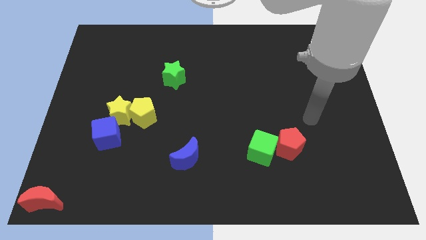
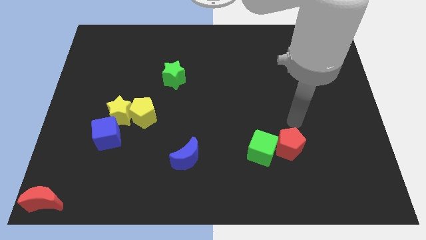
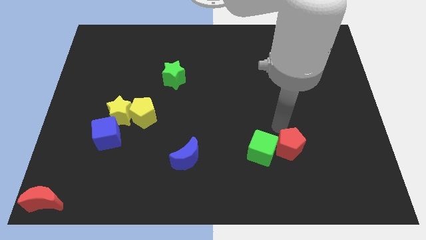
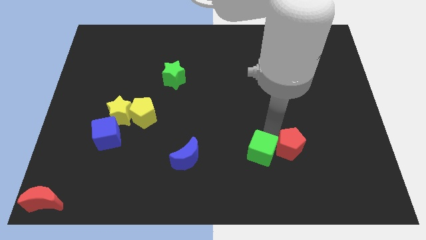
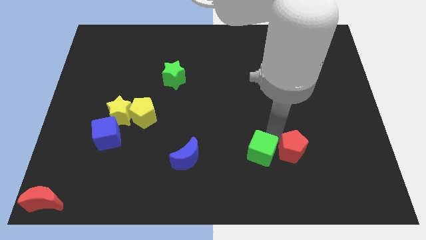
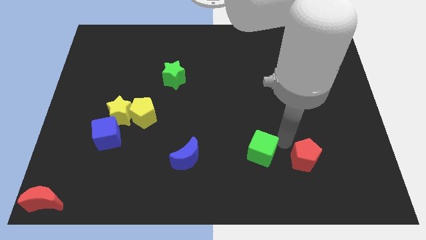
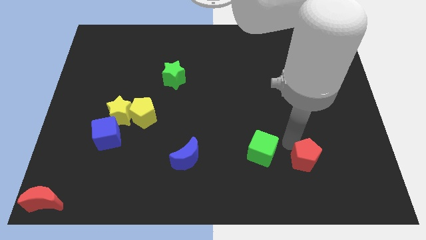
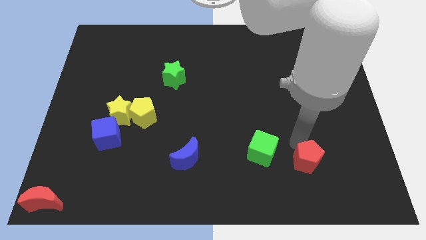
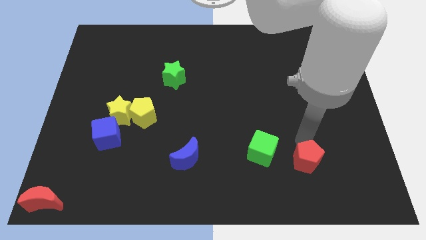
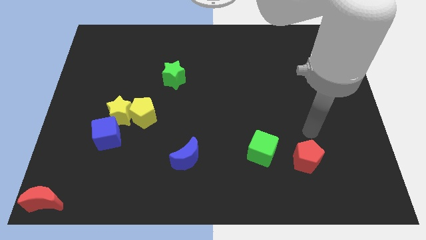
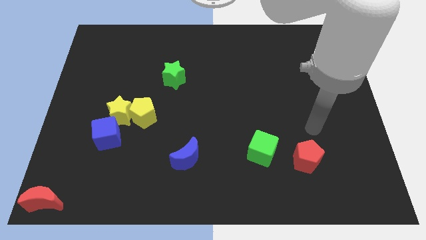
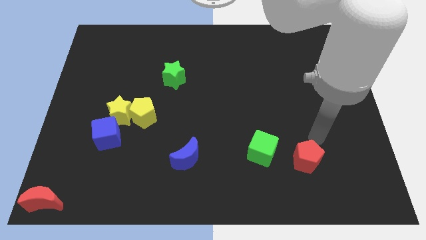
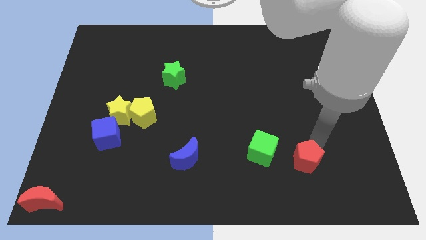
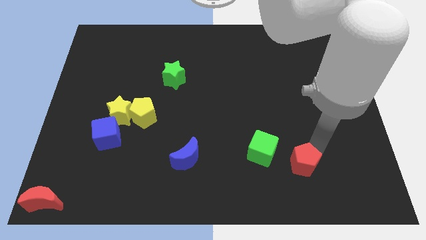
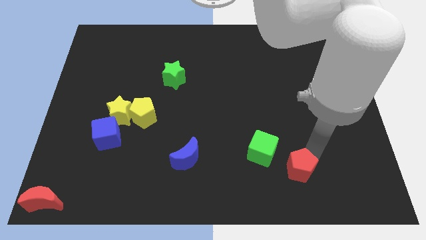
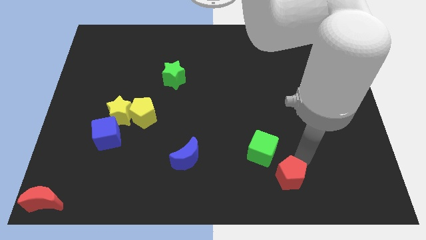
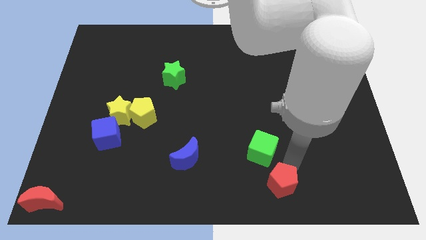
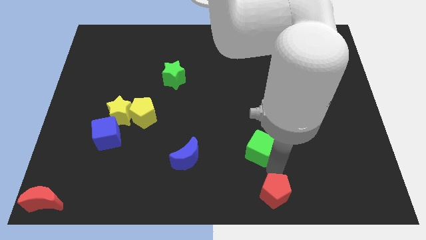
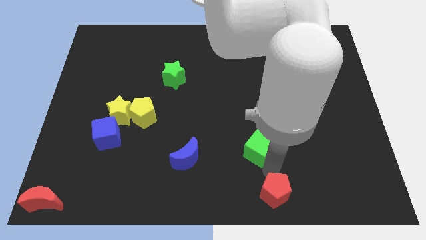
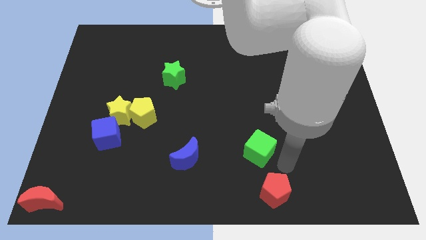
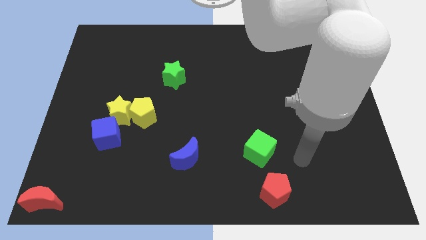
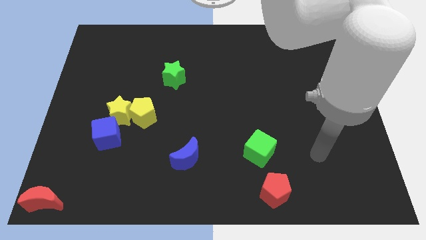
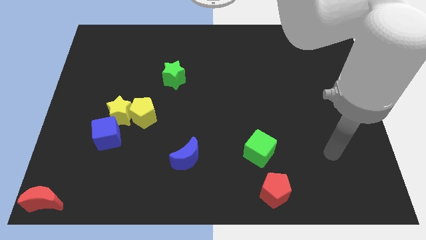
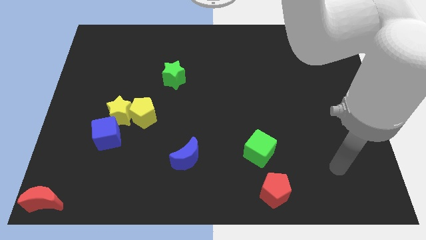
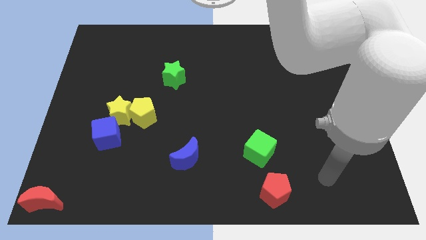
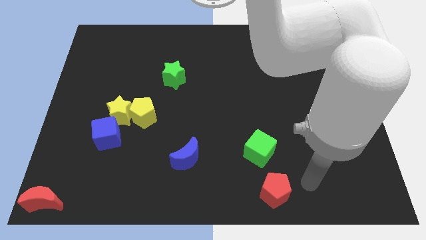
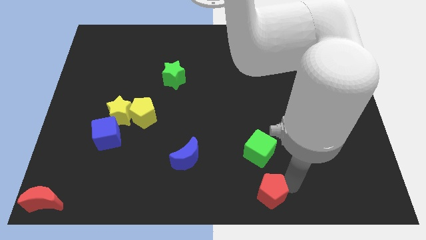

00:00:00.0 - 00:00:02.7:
place the red pentagon below the green cube

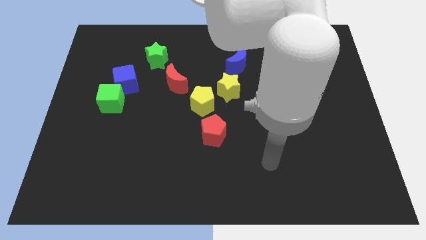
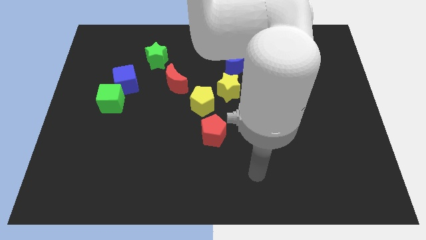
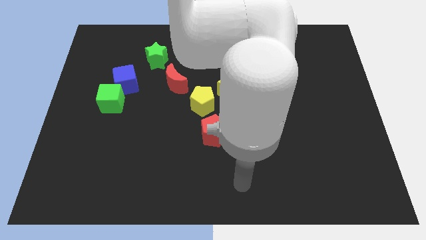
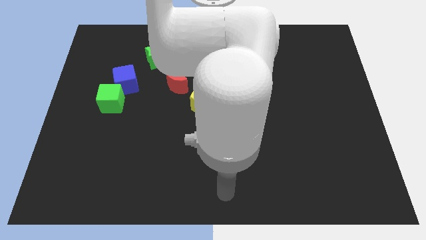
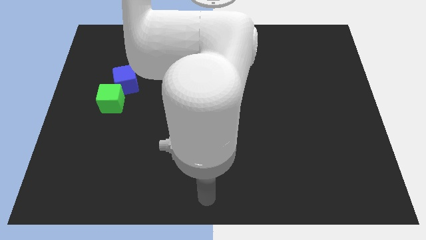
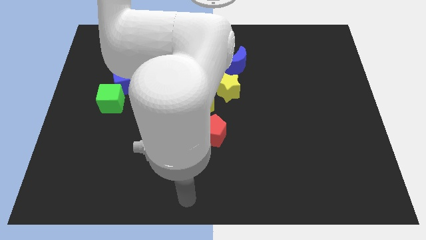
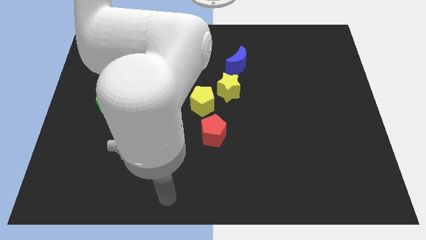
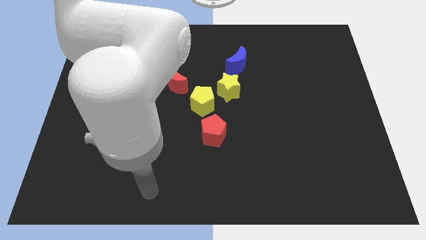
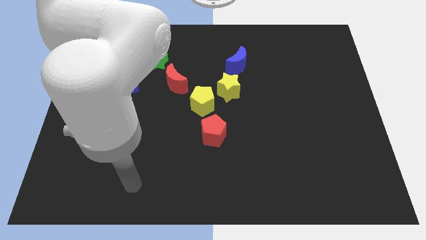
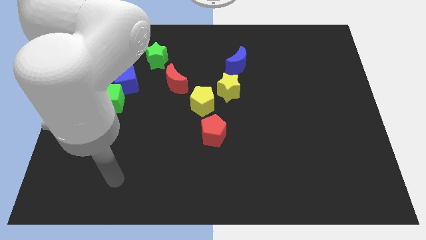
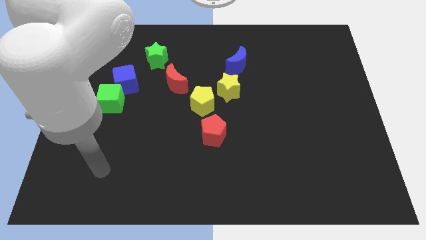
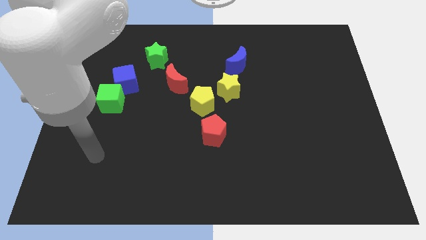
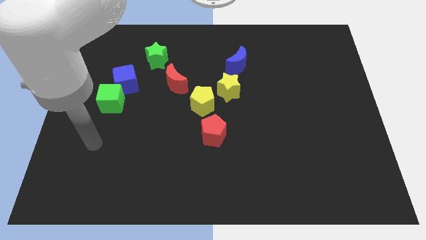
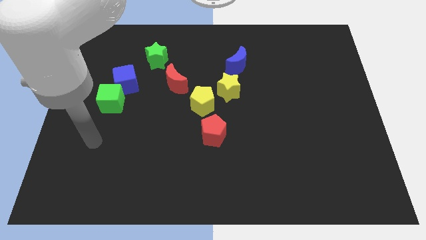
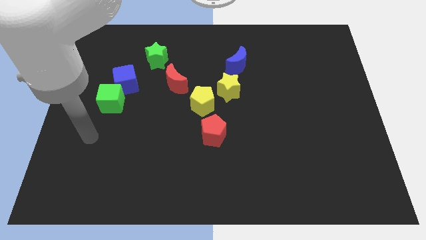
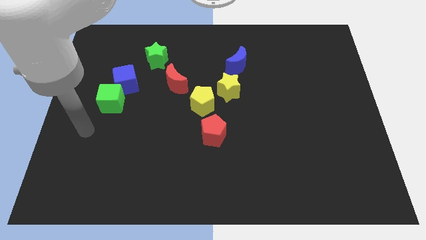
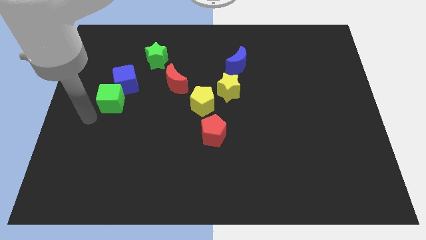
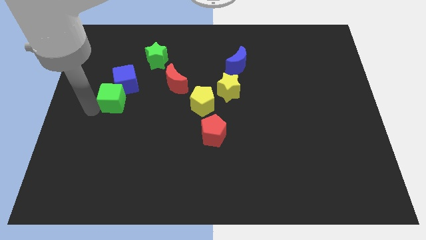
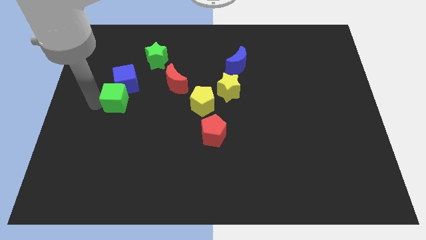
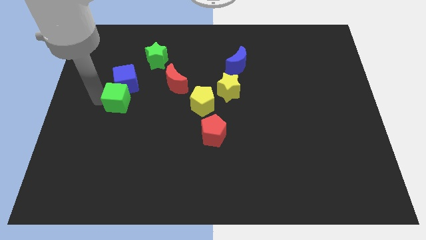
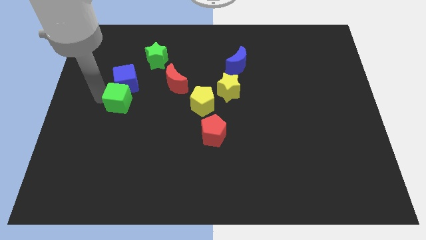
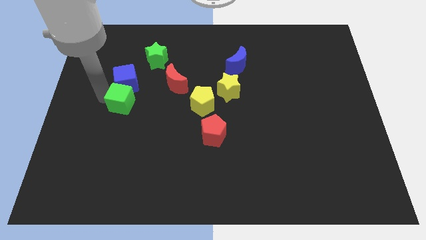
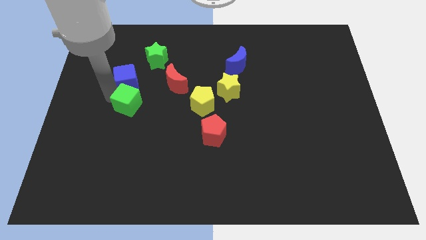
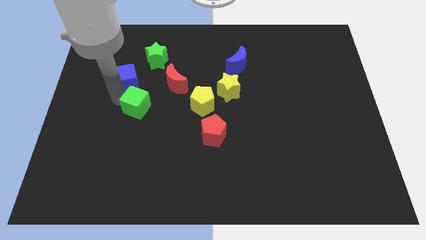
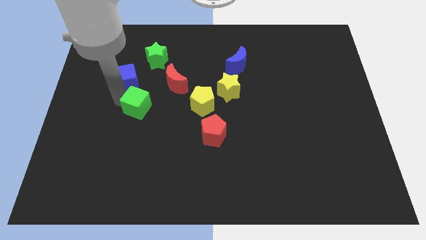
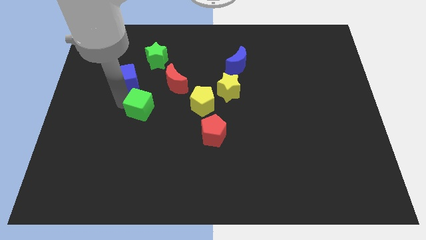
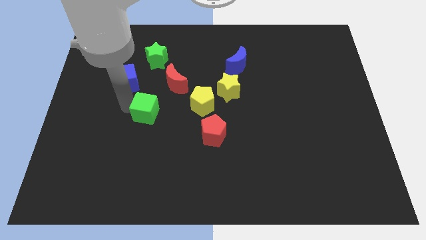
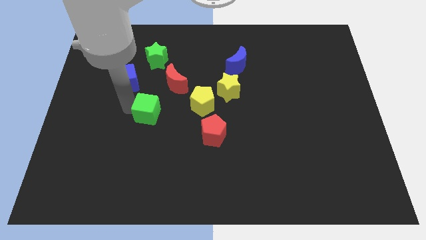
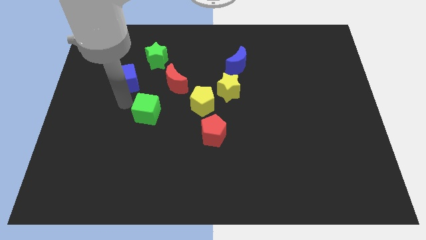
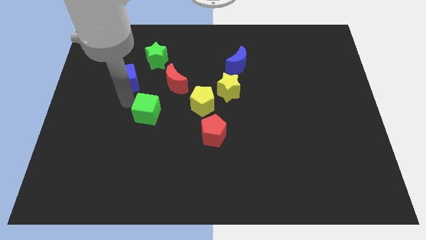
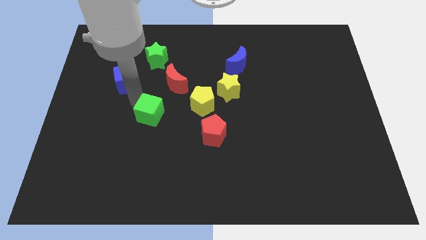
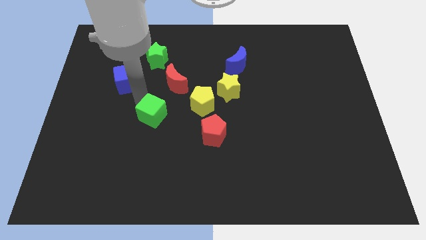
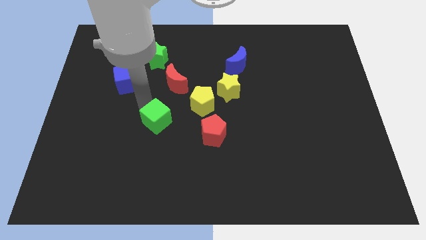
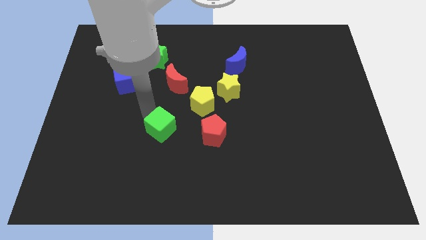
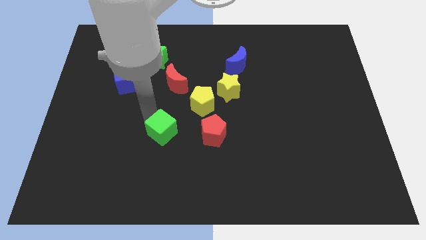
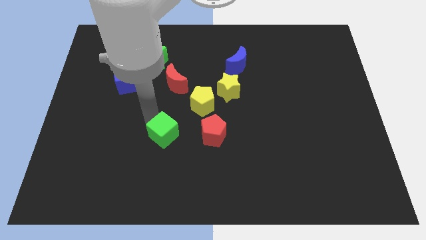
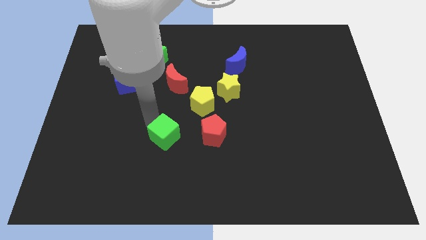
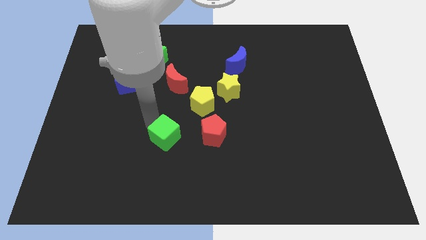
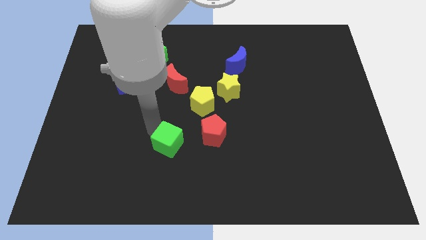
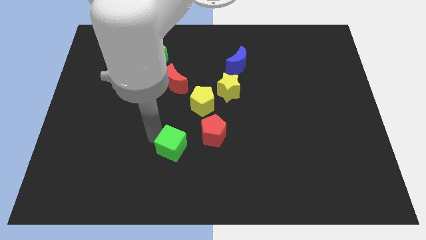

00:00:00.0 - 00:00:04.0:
place the green cube below the red crescent

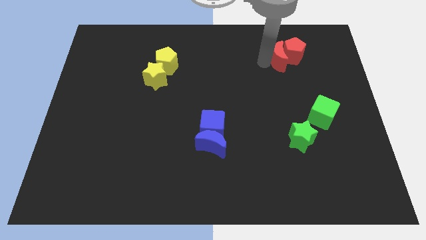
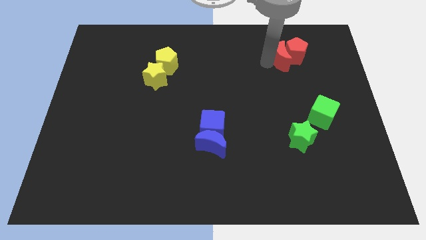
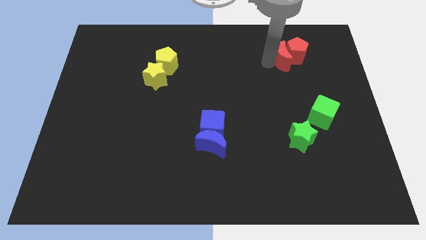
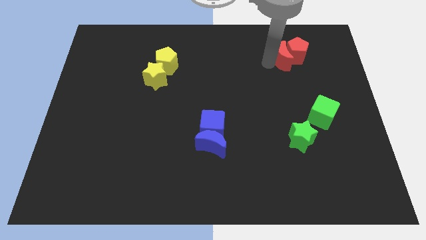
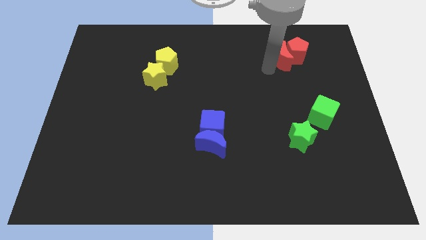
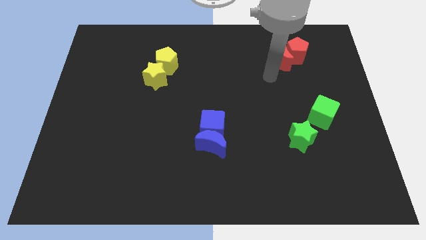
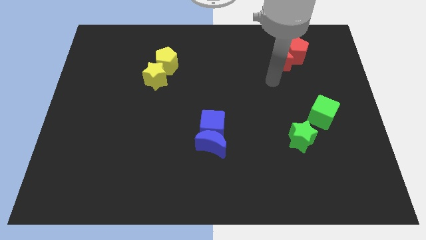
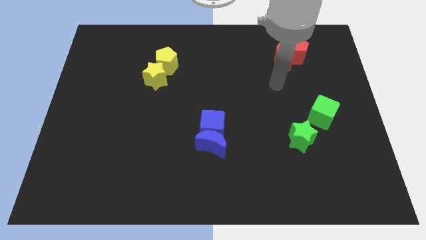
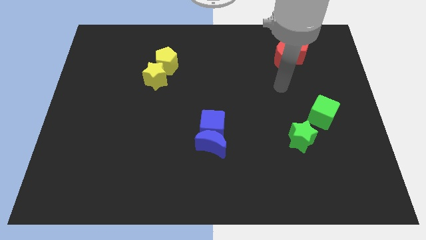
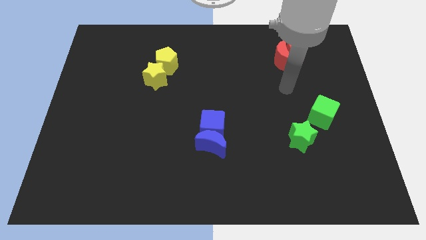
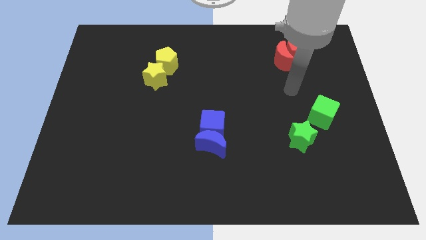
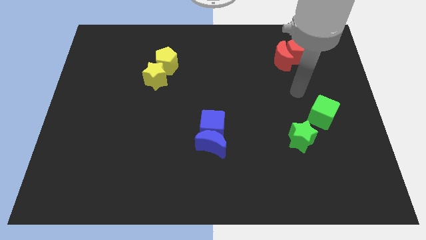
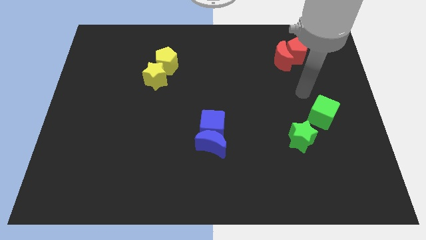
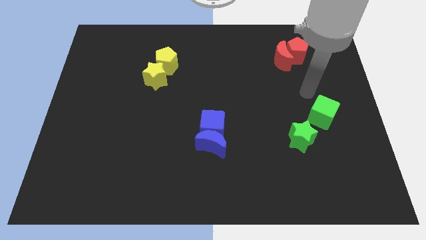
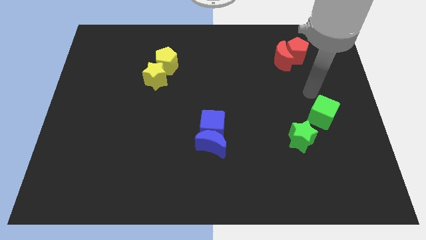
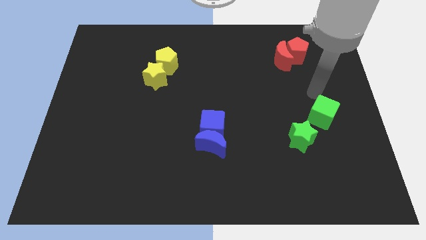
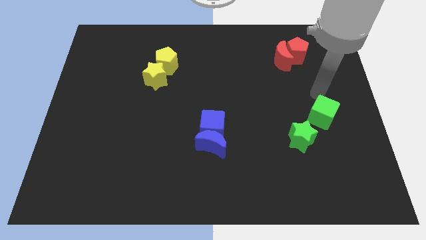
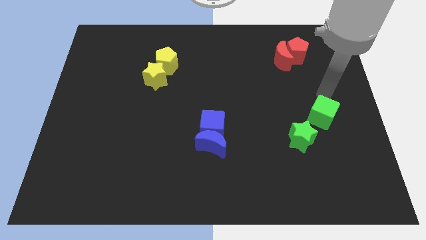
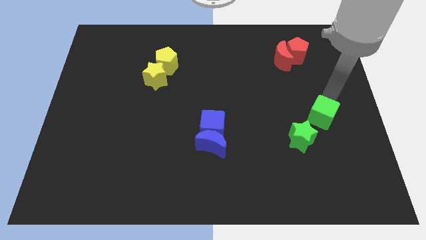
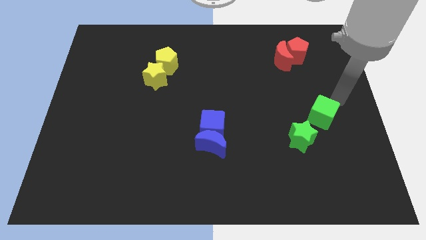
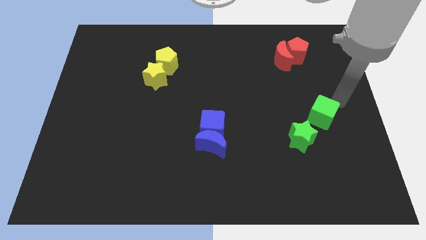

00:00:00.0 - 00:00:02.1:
place the arm diagonally to the green cube

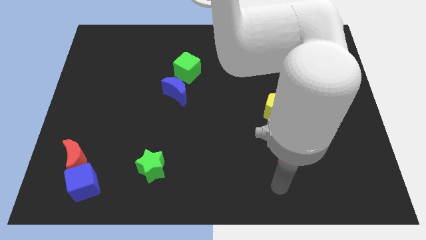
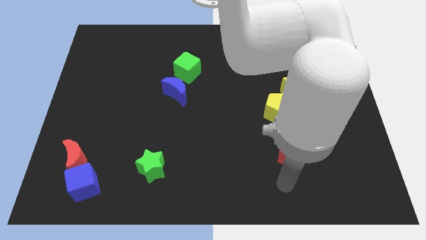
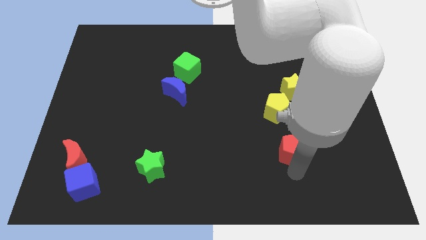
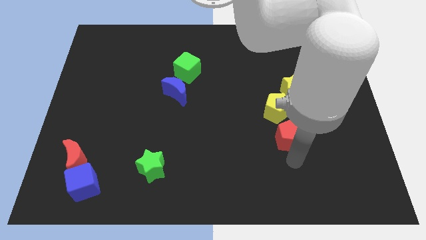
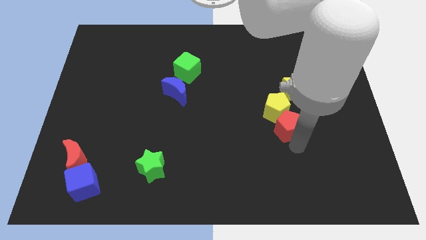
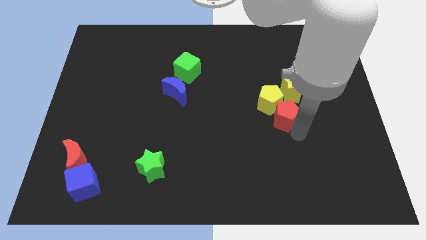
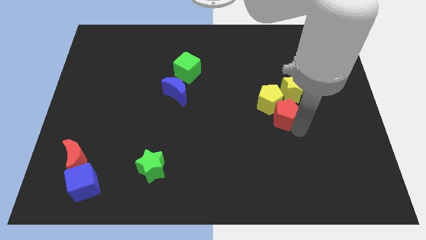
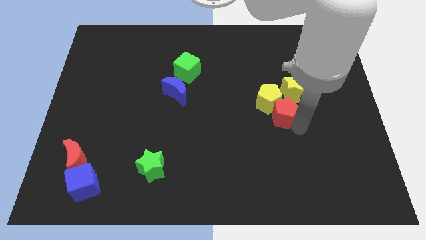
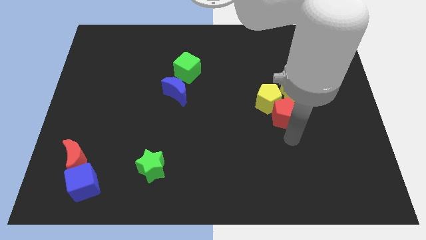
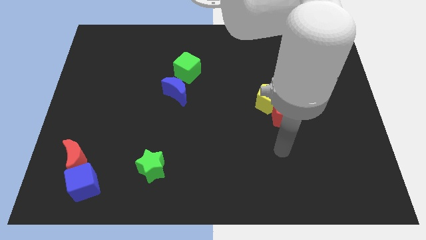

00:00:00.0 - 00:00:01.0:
push the red pentagon into the yellow pentagon from the bottom
